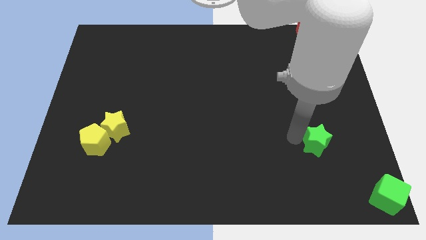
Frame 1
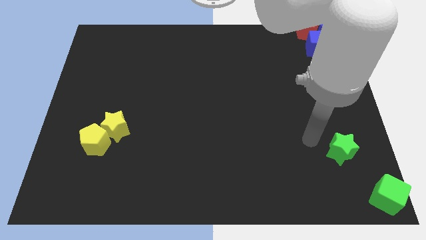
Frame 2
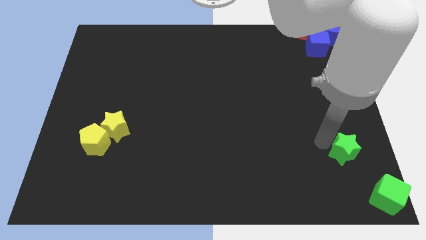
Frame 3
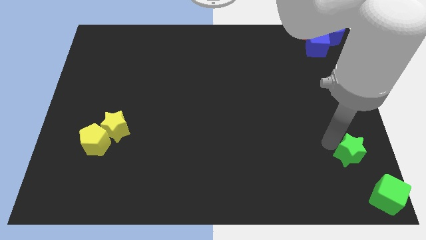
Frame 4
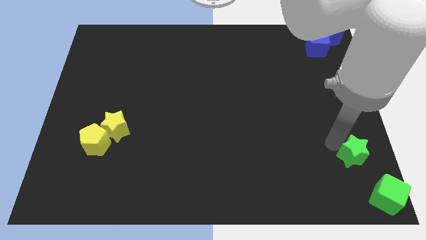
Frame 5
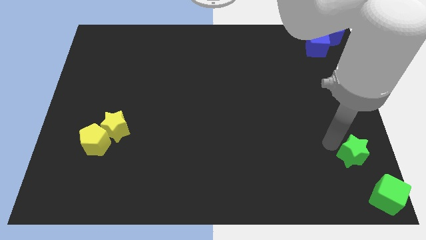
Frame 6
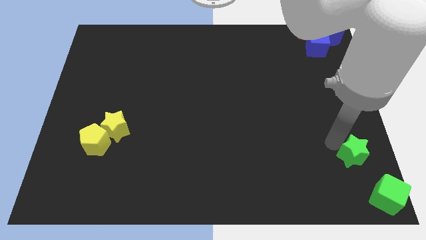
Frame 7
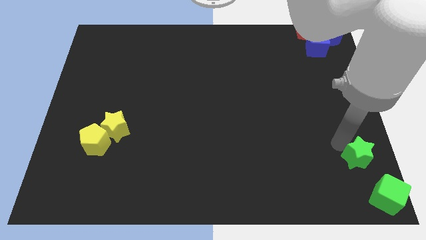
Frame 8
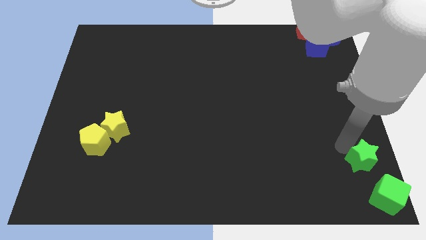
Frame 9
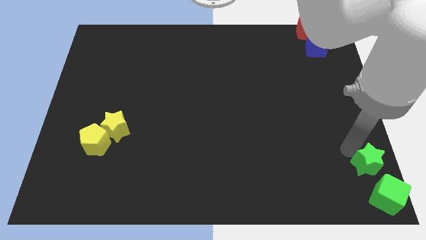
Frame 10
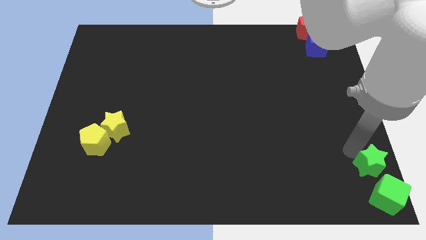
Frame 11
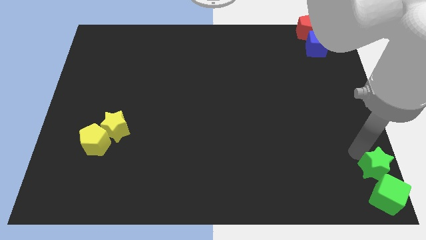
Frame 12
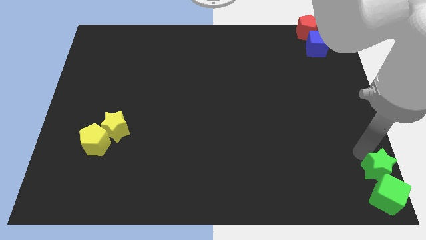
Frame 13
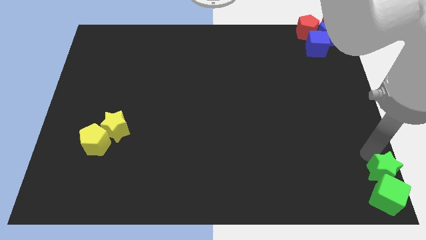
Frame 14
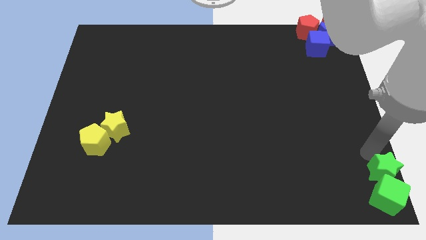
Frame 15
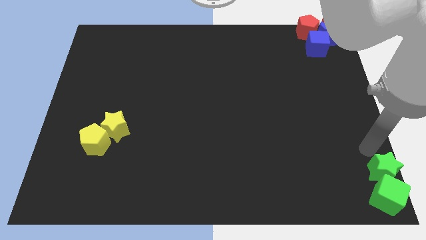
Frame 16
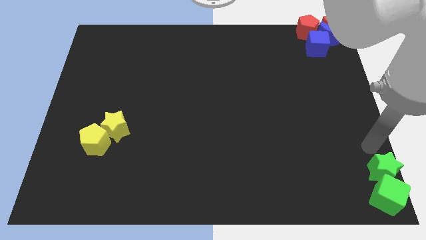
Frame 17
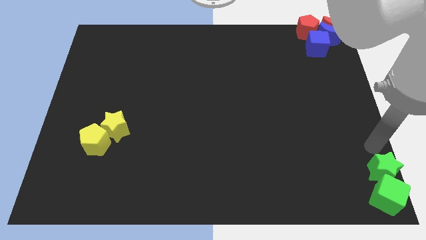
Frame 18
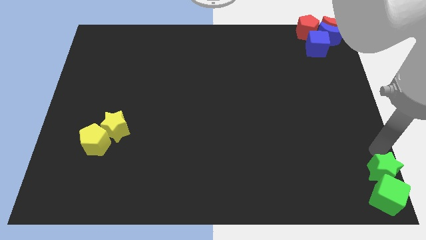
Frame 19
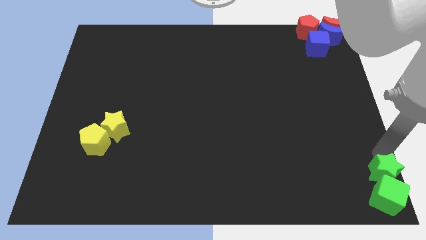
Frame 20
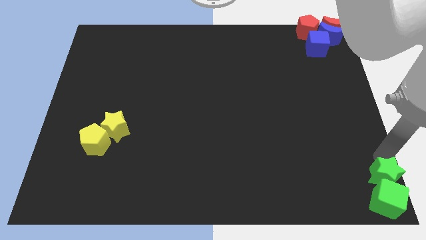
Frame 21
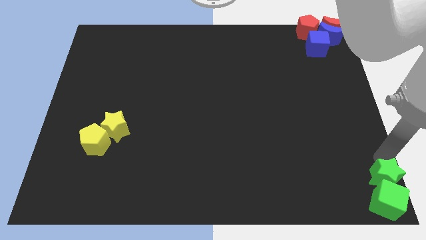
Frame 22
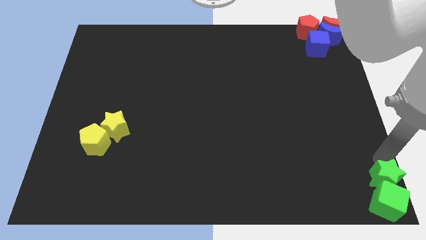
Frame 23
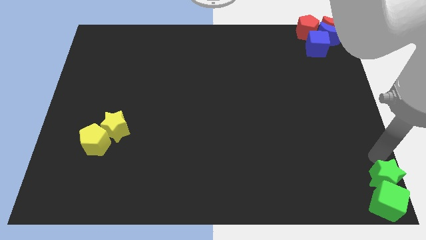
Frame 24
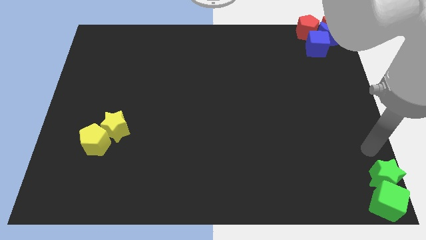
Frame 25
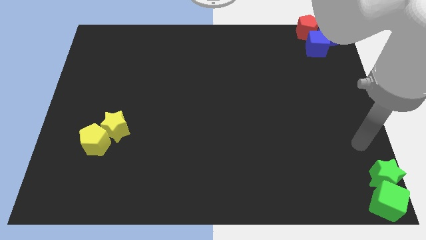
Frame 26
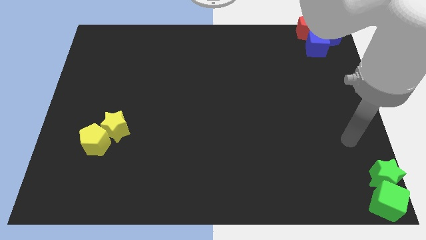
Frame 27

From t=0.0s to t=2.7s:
move the green star above the green cube

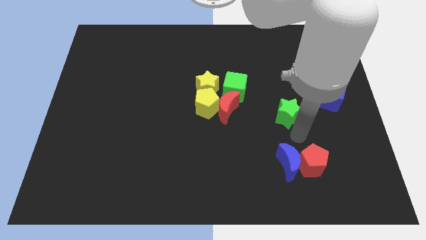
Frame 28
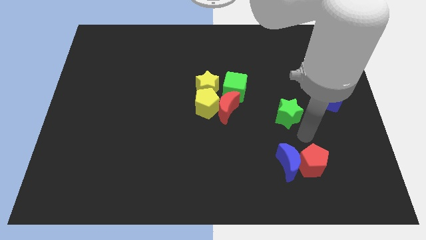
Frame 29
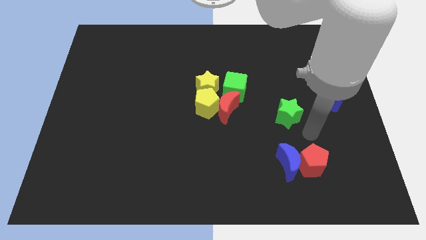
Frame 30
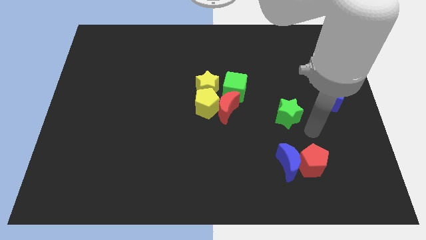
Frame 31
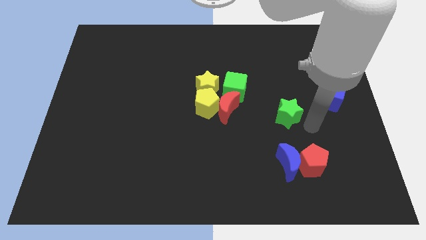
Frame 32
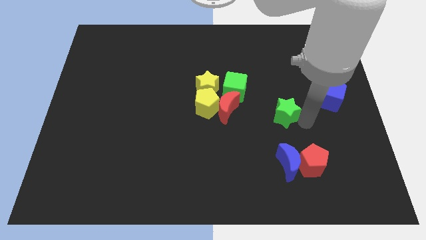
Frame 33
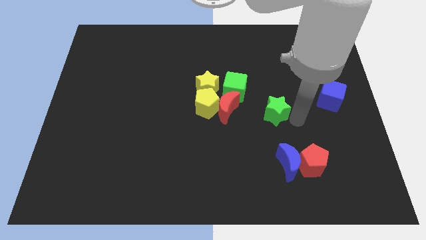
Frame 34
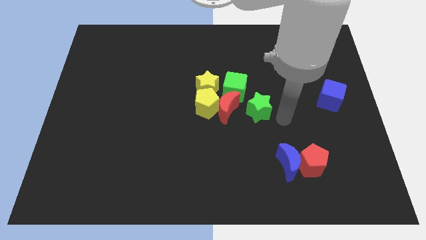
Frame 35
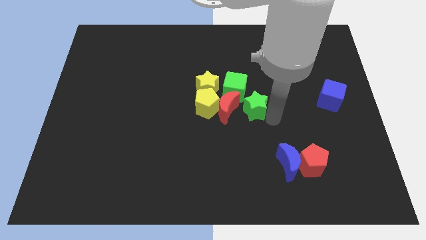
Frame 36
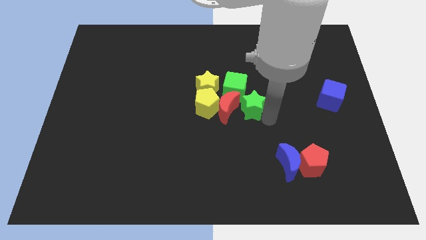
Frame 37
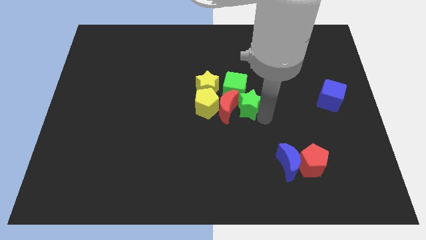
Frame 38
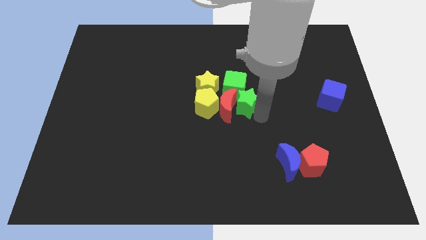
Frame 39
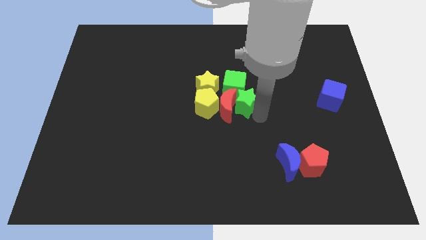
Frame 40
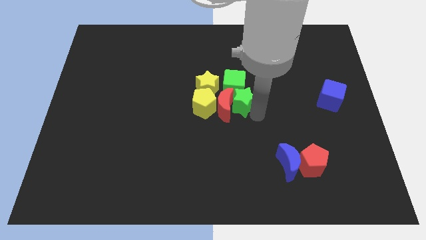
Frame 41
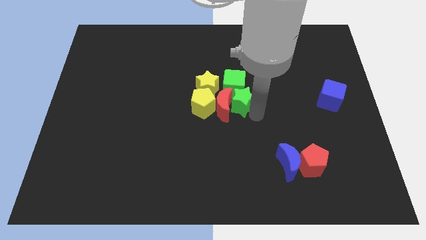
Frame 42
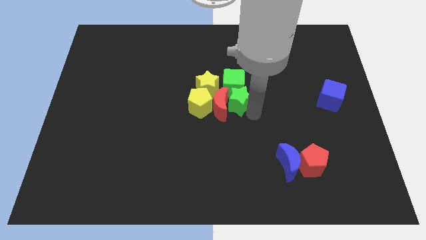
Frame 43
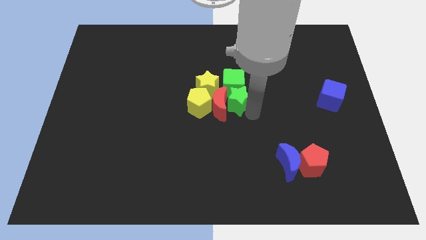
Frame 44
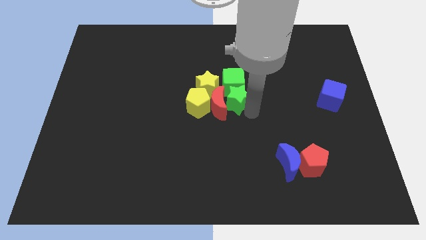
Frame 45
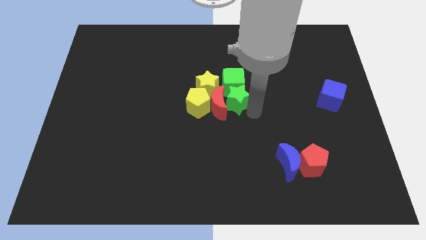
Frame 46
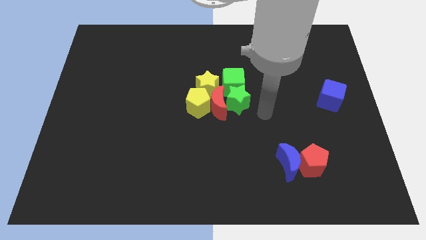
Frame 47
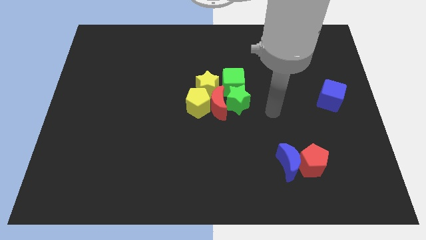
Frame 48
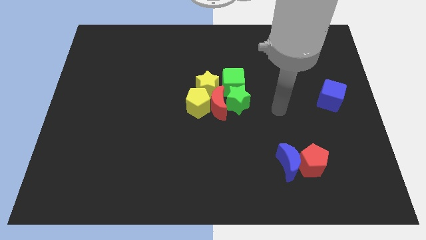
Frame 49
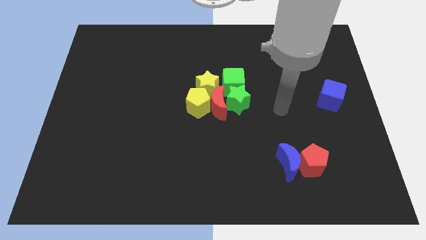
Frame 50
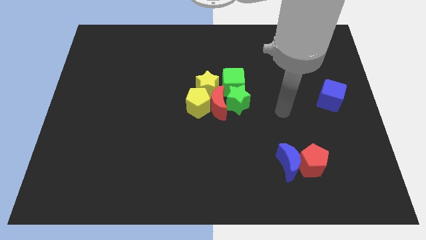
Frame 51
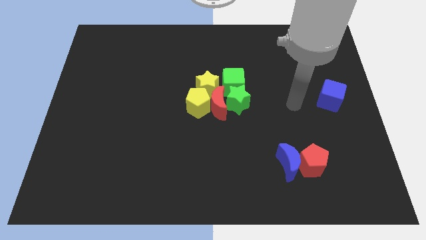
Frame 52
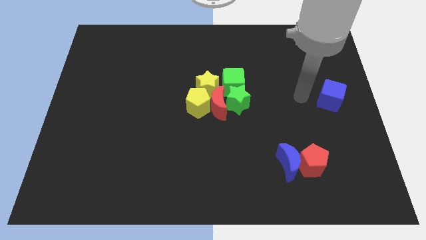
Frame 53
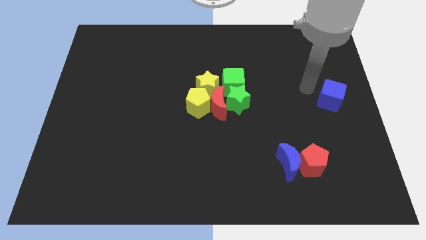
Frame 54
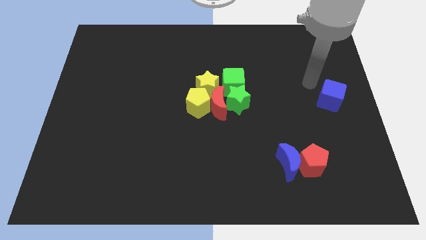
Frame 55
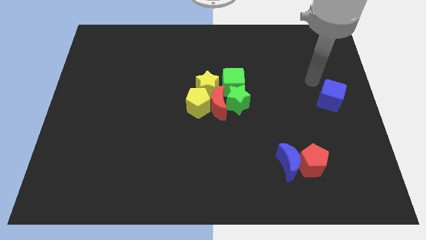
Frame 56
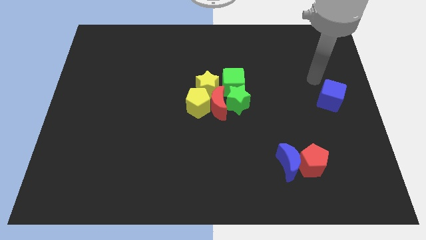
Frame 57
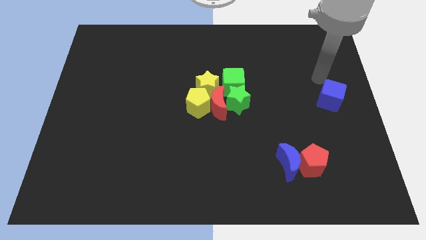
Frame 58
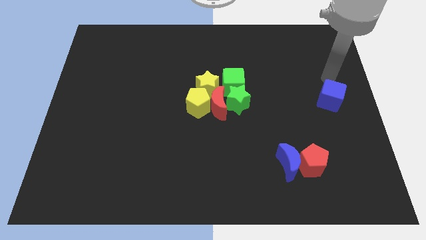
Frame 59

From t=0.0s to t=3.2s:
push the green star into the green cube

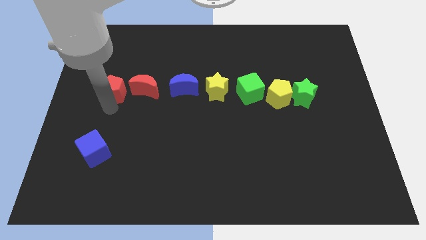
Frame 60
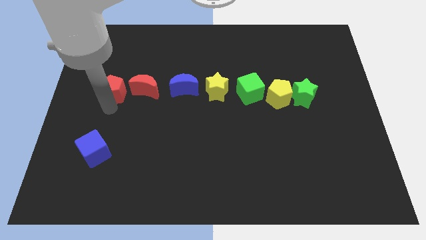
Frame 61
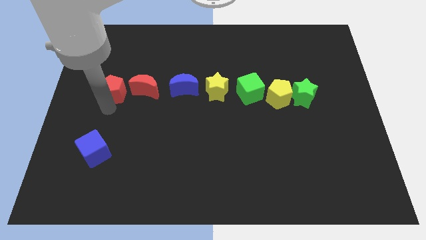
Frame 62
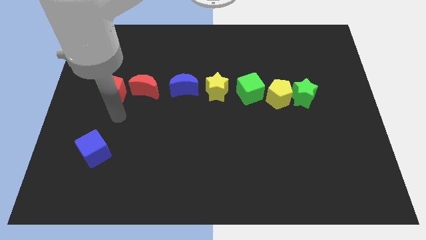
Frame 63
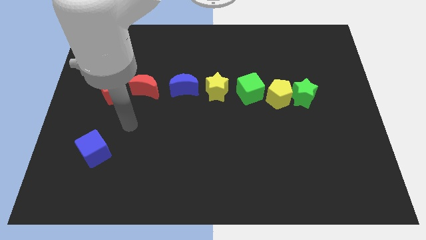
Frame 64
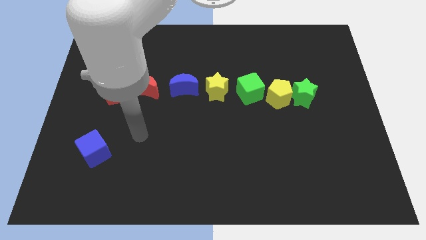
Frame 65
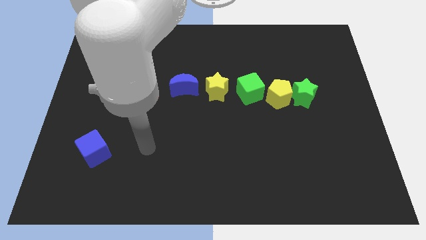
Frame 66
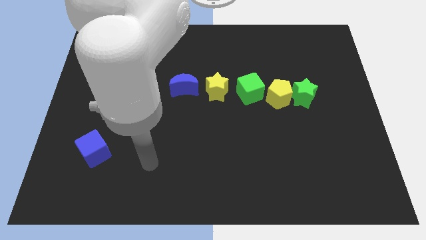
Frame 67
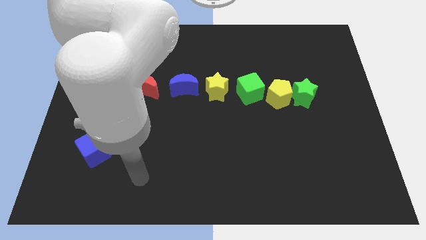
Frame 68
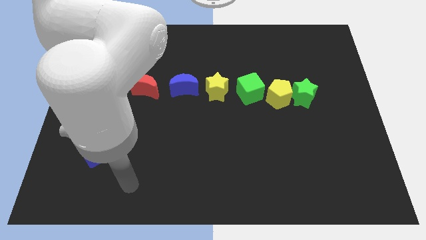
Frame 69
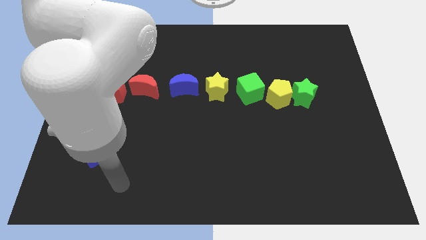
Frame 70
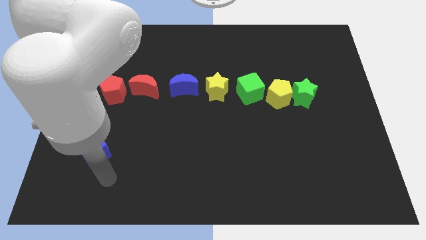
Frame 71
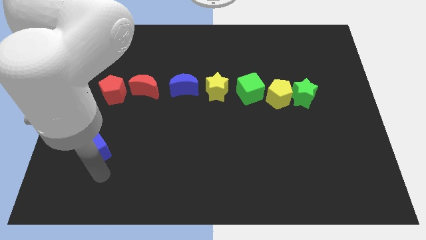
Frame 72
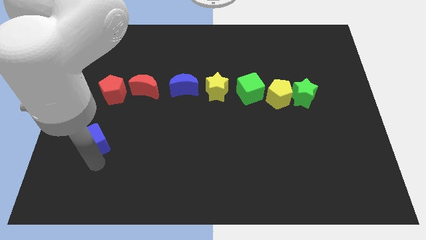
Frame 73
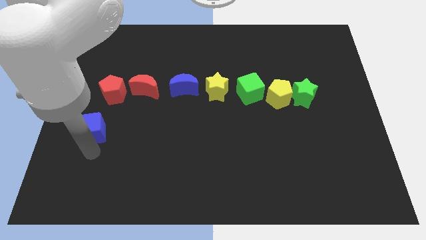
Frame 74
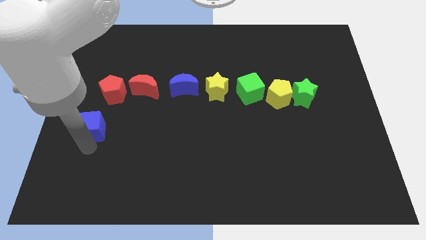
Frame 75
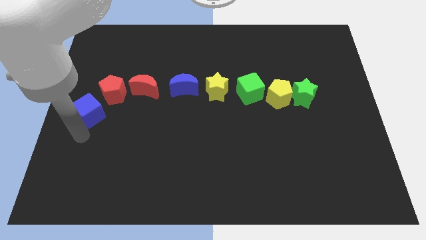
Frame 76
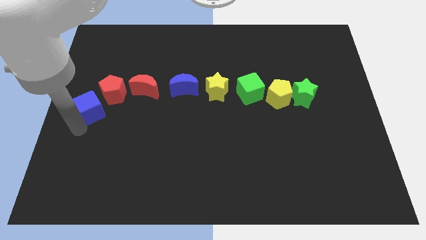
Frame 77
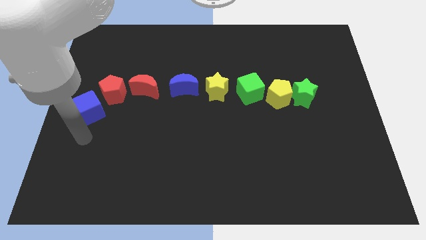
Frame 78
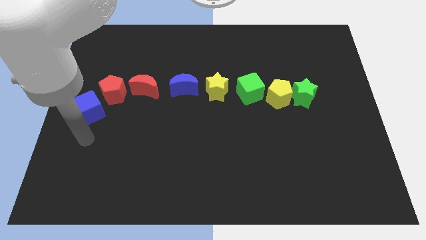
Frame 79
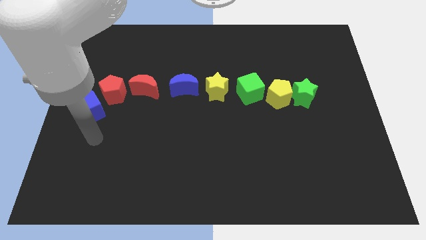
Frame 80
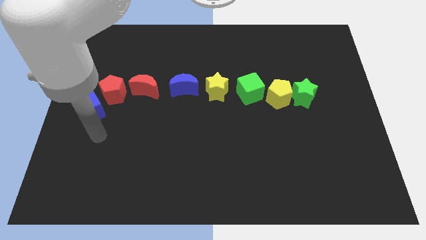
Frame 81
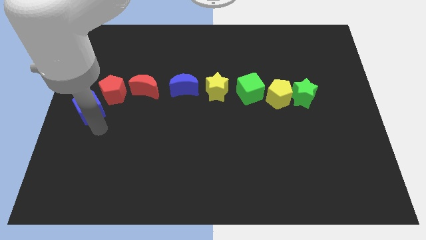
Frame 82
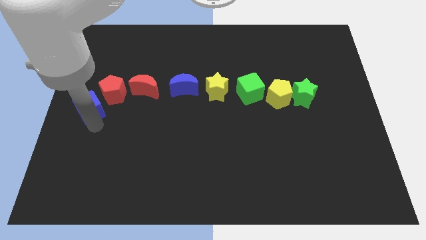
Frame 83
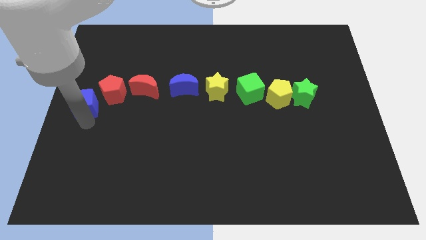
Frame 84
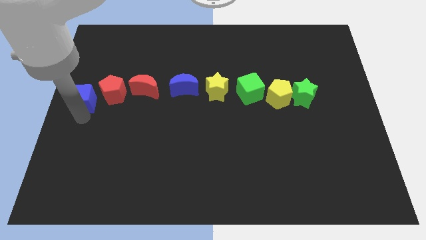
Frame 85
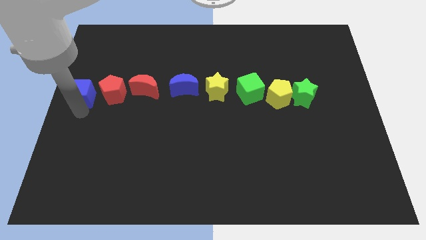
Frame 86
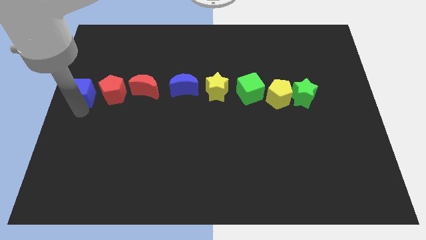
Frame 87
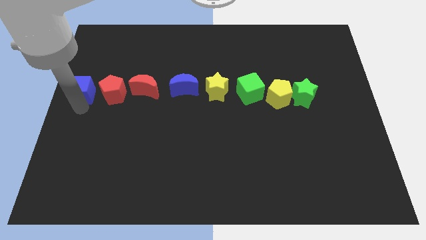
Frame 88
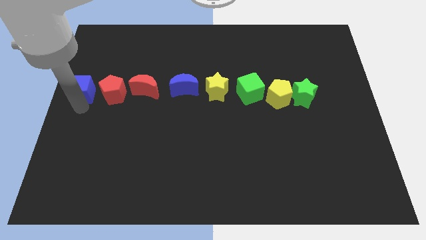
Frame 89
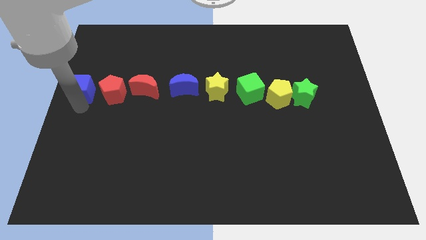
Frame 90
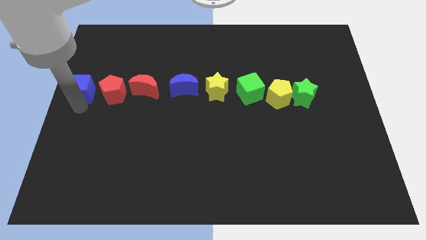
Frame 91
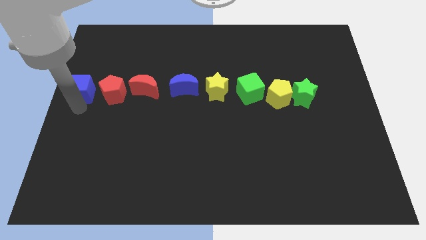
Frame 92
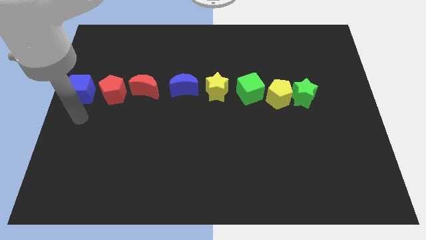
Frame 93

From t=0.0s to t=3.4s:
move the blue cube to the left of red crescent
